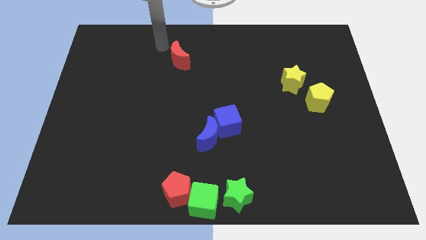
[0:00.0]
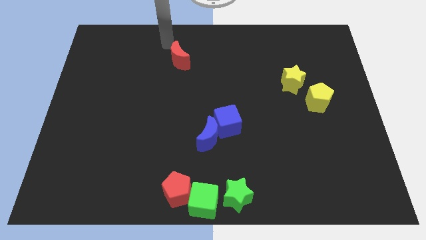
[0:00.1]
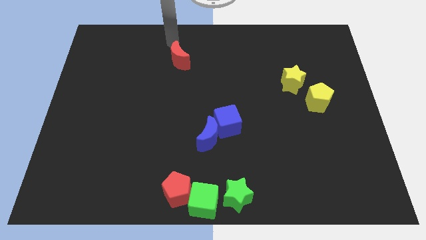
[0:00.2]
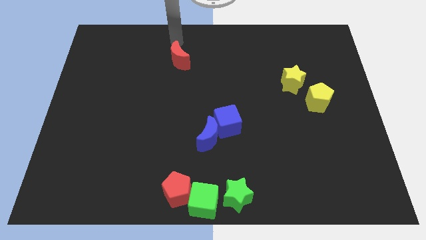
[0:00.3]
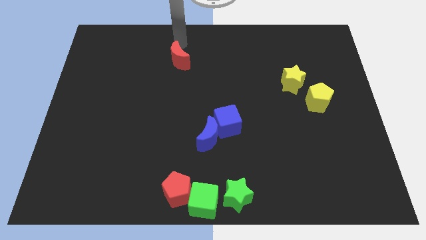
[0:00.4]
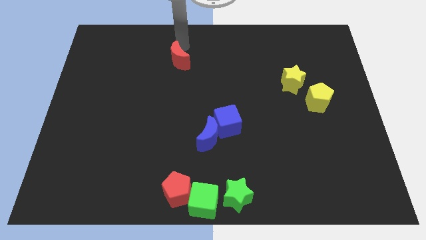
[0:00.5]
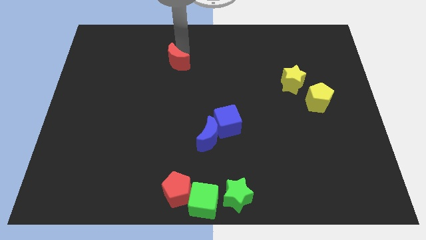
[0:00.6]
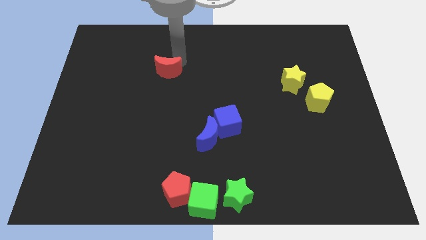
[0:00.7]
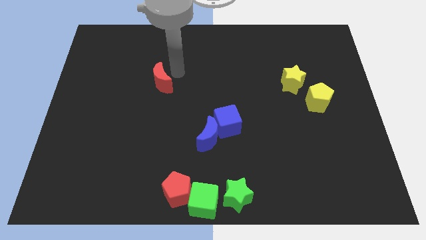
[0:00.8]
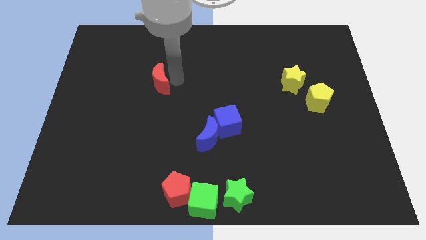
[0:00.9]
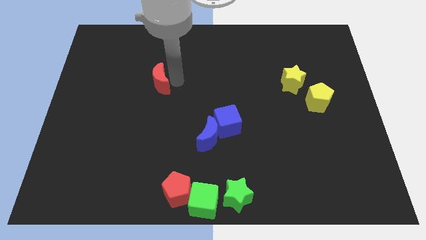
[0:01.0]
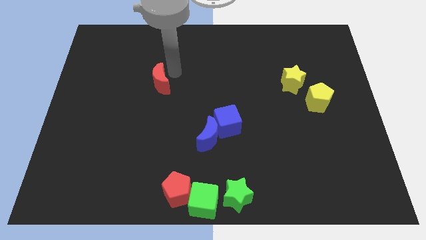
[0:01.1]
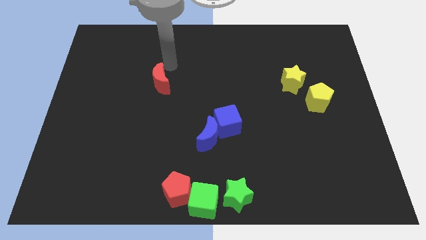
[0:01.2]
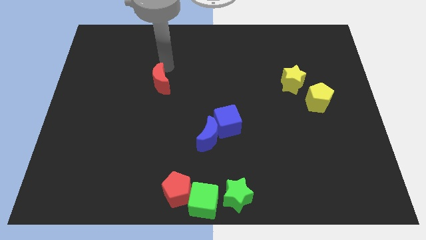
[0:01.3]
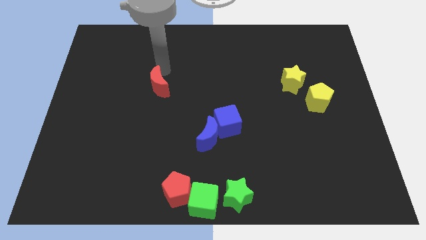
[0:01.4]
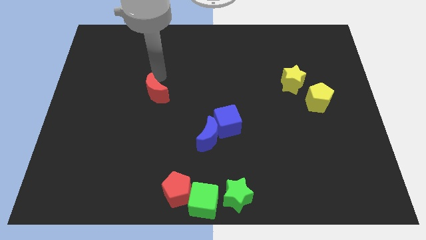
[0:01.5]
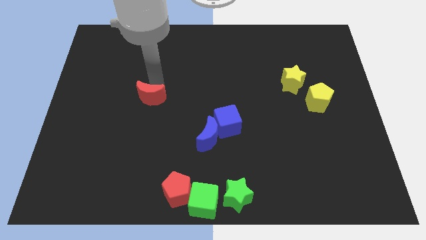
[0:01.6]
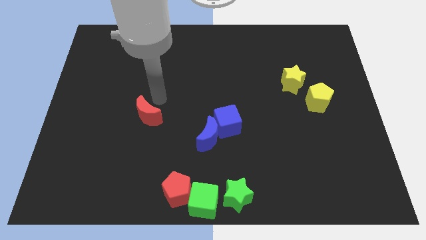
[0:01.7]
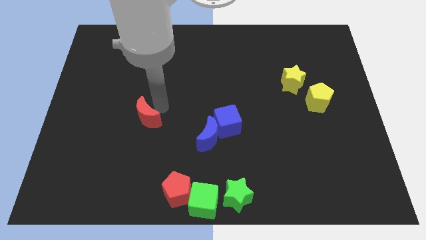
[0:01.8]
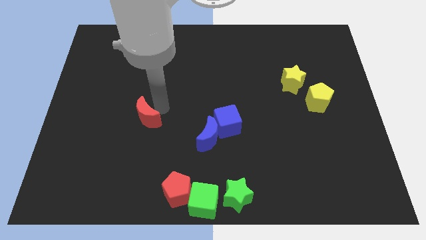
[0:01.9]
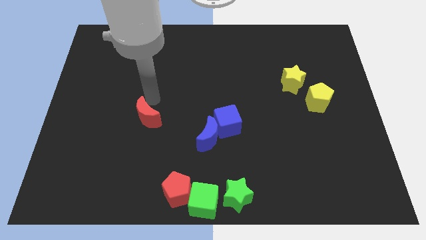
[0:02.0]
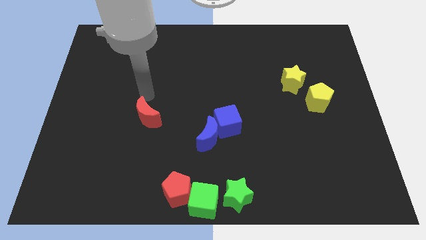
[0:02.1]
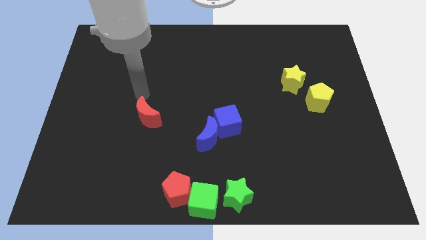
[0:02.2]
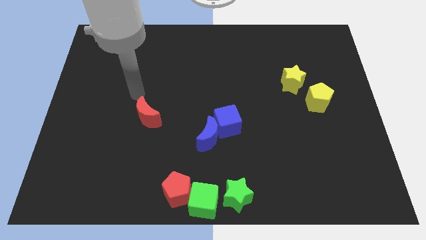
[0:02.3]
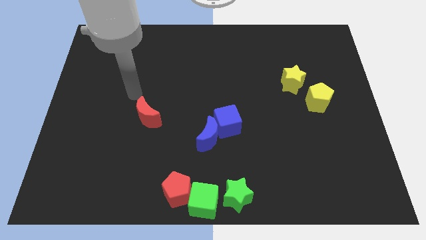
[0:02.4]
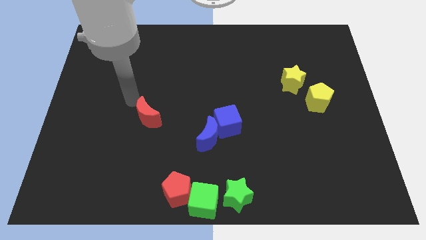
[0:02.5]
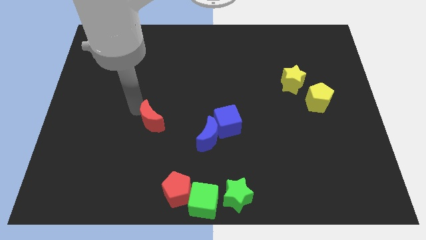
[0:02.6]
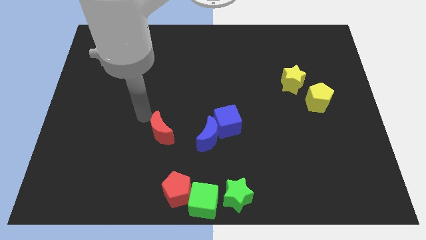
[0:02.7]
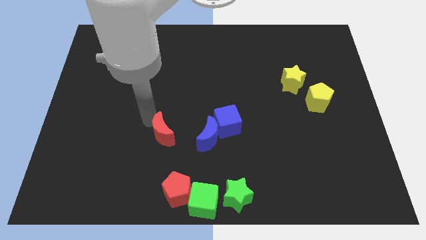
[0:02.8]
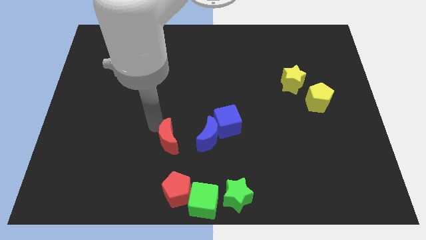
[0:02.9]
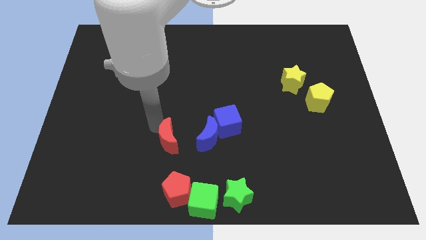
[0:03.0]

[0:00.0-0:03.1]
move the red moon to the left side of the blue moon

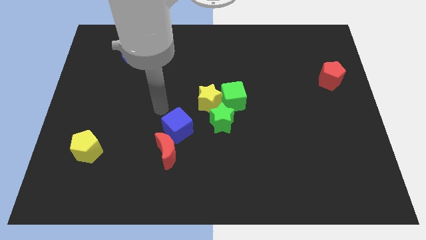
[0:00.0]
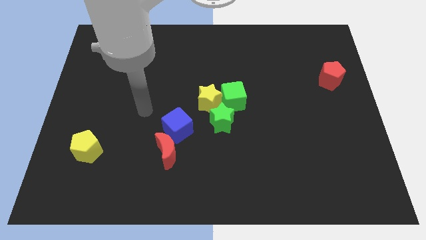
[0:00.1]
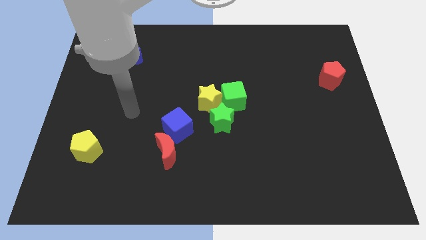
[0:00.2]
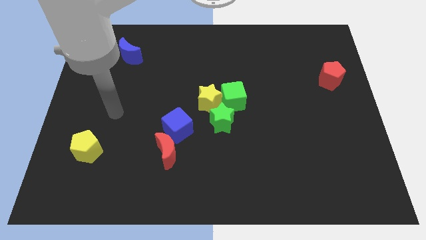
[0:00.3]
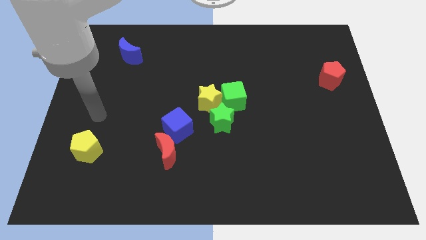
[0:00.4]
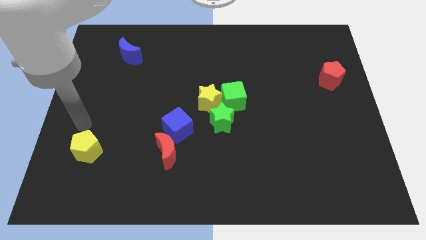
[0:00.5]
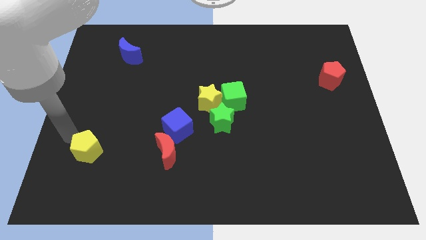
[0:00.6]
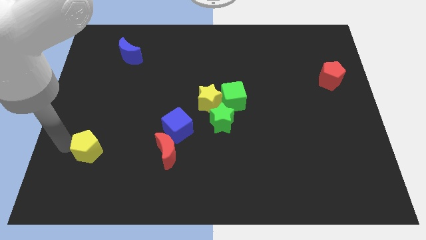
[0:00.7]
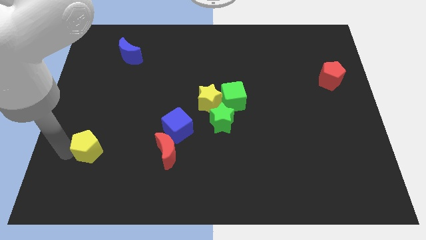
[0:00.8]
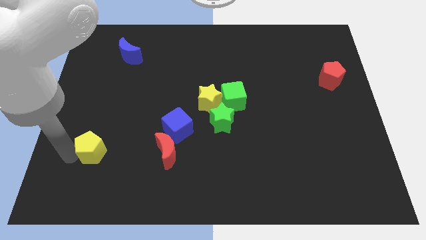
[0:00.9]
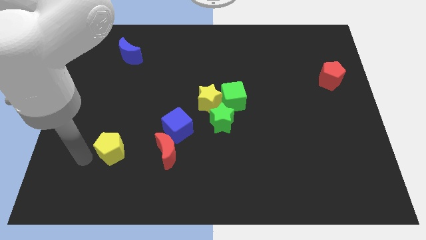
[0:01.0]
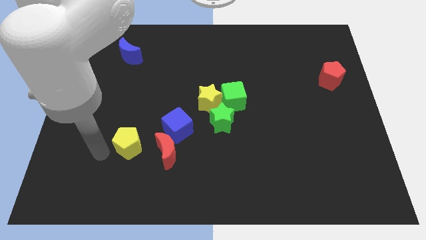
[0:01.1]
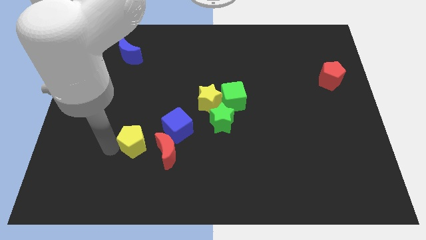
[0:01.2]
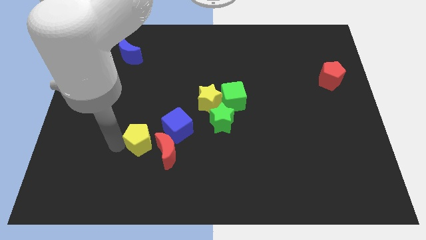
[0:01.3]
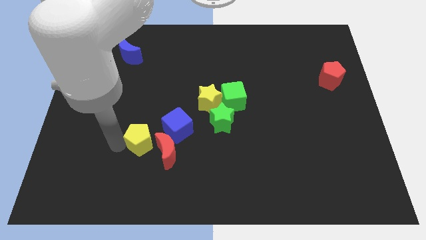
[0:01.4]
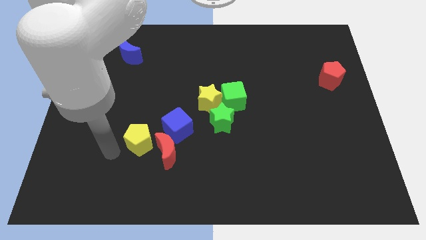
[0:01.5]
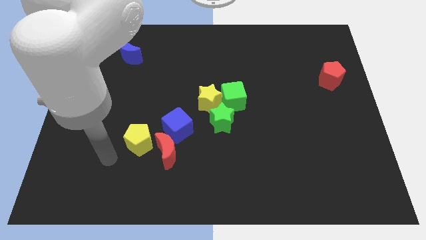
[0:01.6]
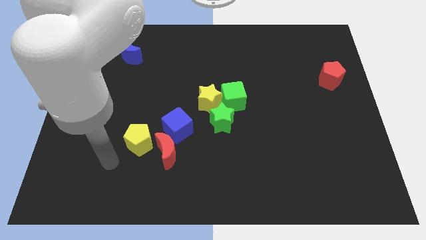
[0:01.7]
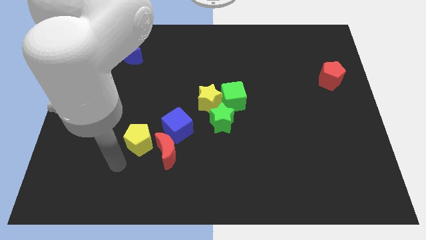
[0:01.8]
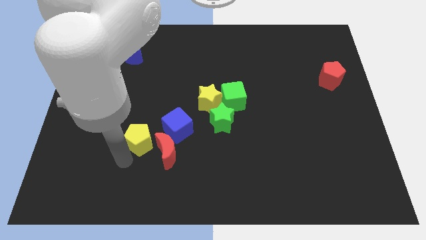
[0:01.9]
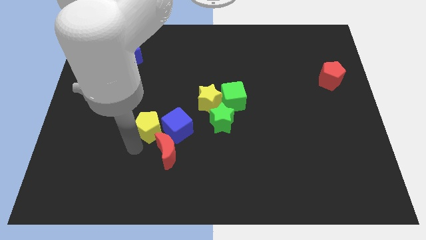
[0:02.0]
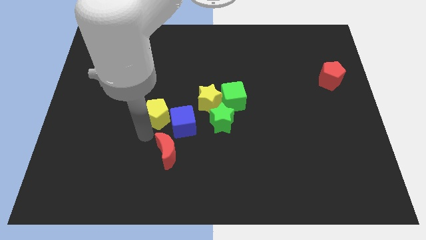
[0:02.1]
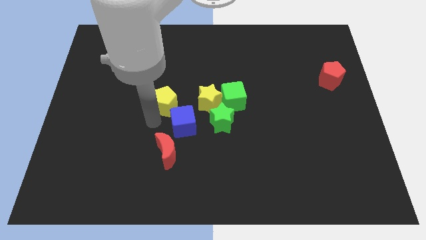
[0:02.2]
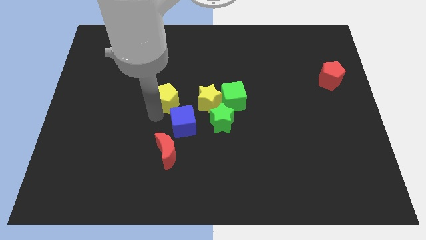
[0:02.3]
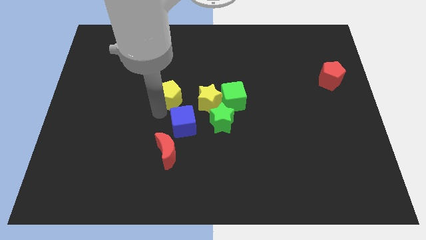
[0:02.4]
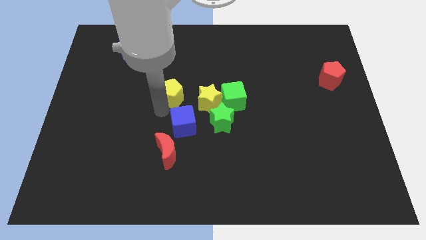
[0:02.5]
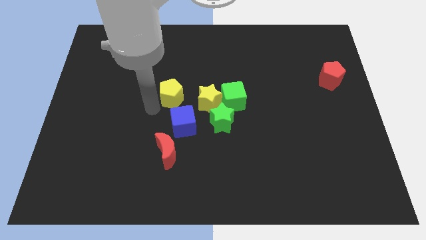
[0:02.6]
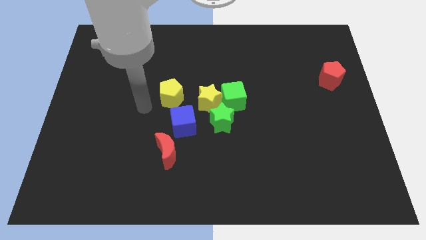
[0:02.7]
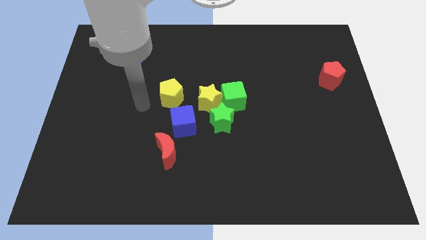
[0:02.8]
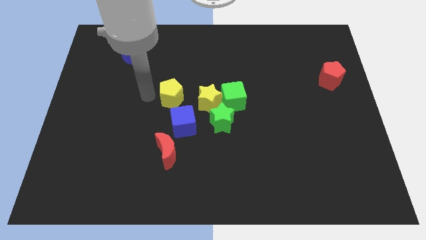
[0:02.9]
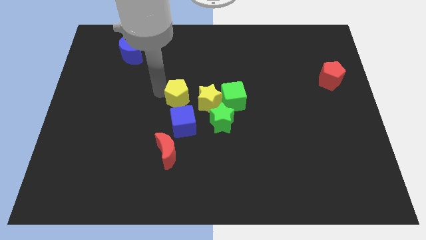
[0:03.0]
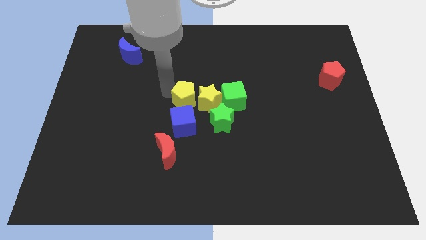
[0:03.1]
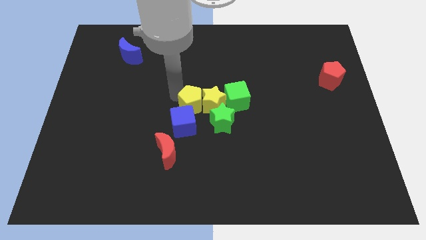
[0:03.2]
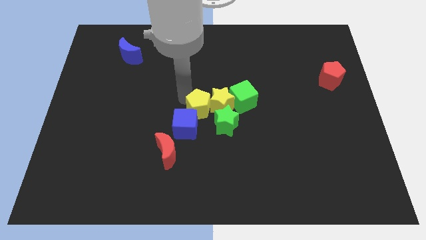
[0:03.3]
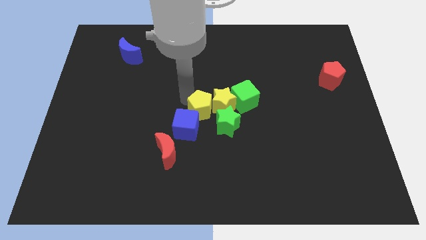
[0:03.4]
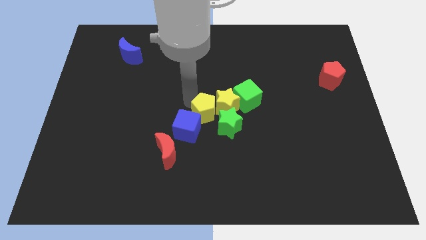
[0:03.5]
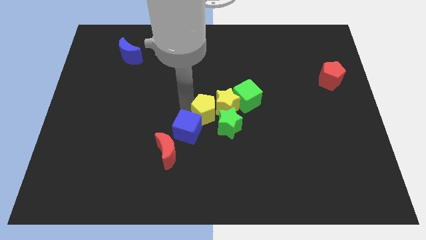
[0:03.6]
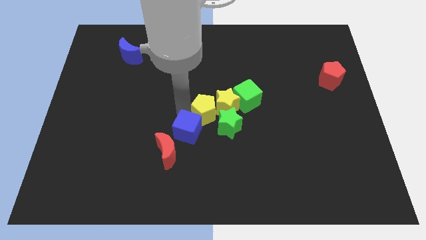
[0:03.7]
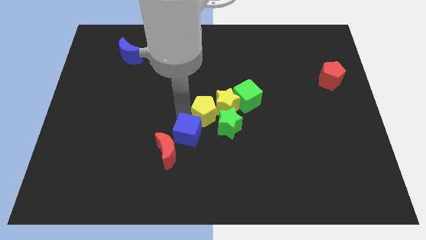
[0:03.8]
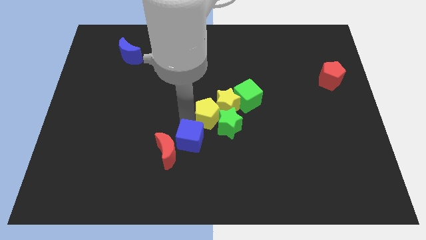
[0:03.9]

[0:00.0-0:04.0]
move the yellow pentagon into yellow star at the left

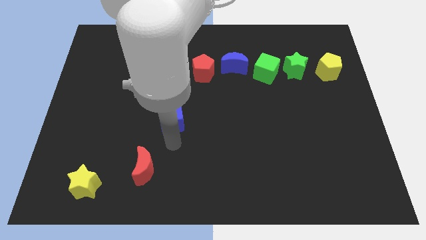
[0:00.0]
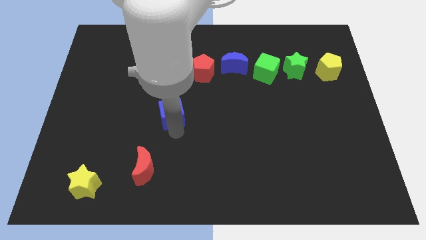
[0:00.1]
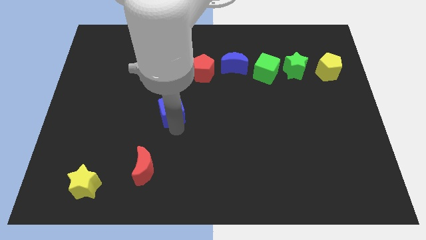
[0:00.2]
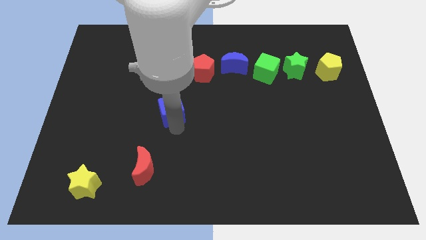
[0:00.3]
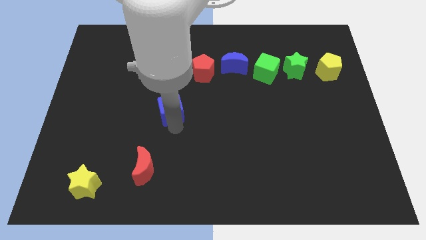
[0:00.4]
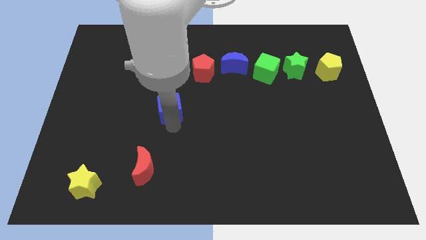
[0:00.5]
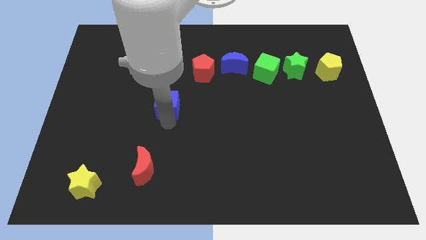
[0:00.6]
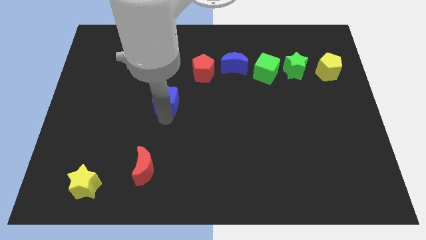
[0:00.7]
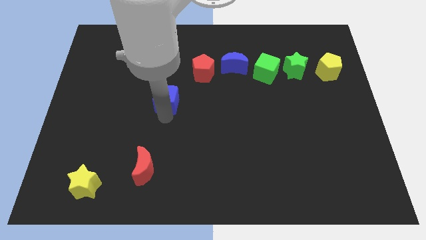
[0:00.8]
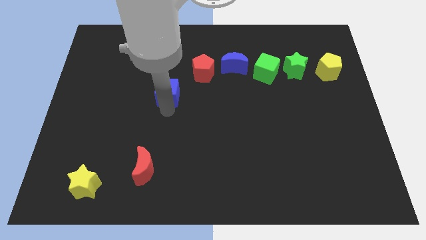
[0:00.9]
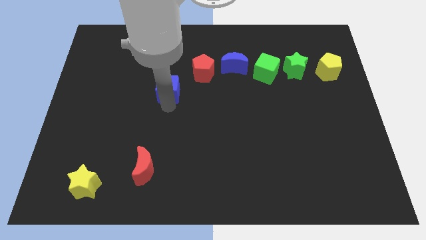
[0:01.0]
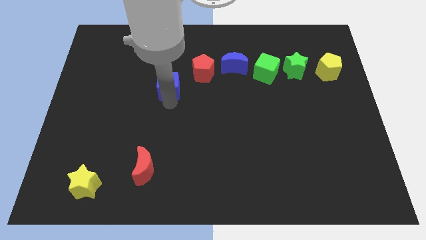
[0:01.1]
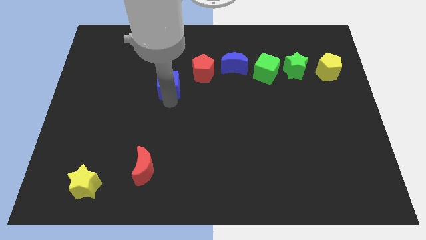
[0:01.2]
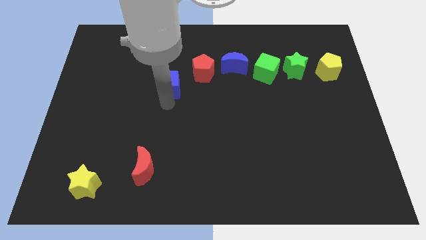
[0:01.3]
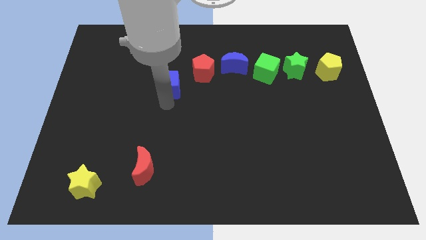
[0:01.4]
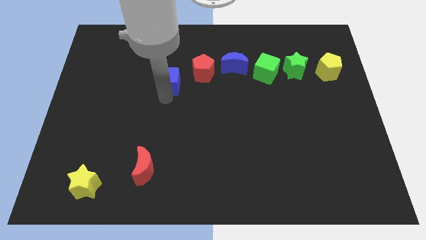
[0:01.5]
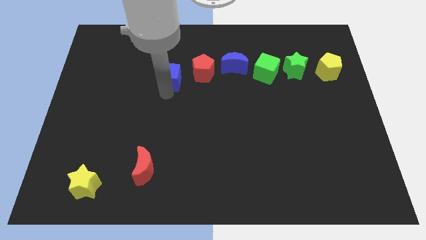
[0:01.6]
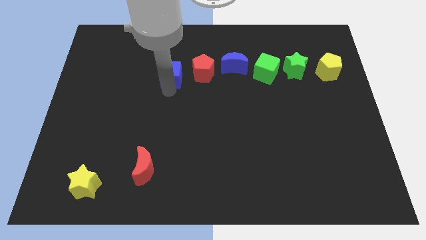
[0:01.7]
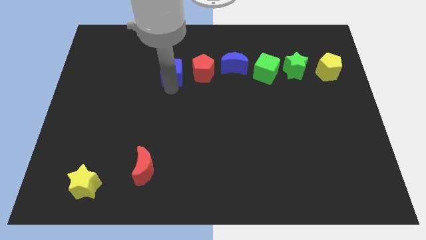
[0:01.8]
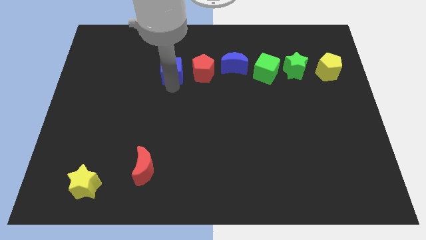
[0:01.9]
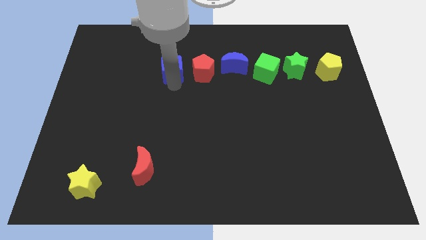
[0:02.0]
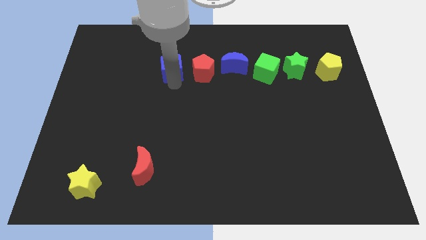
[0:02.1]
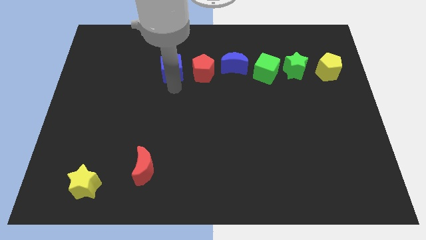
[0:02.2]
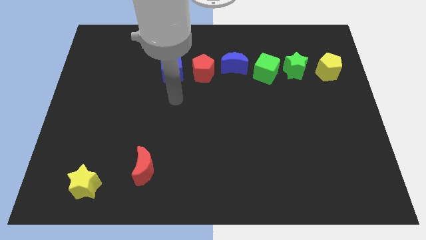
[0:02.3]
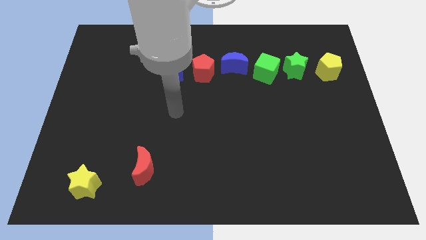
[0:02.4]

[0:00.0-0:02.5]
place the blue cube left to the red pentagon
